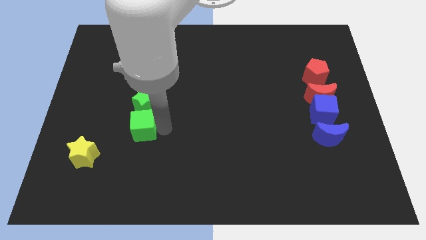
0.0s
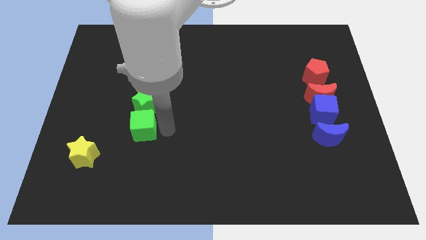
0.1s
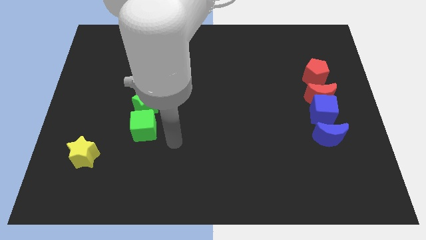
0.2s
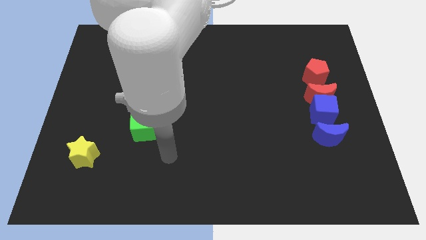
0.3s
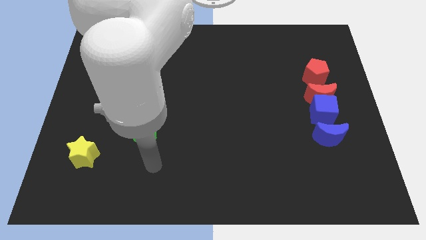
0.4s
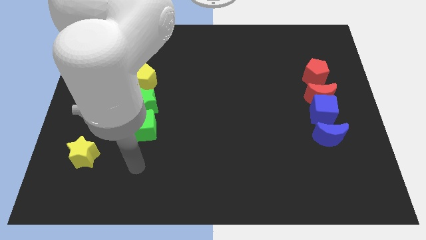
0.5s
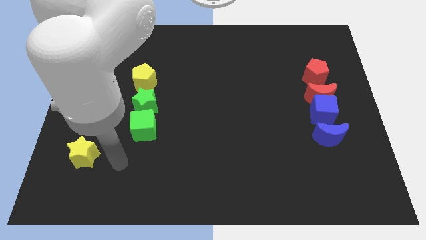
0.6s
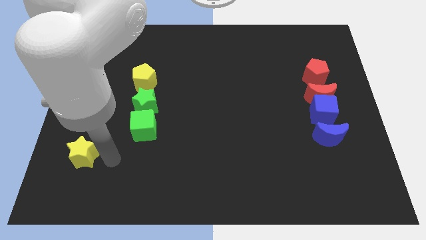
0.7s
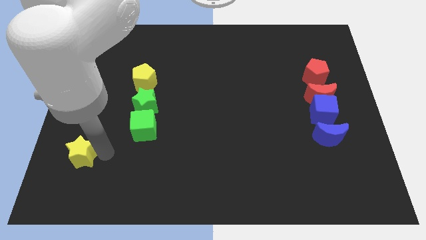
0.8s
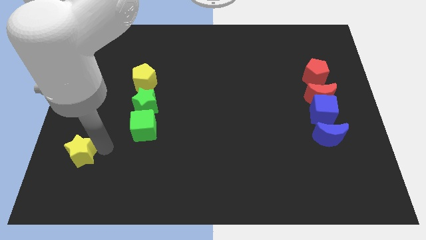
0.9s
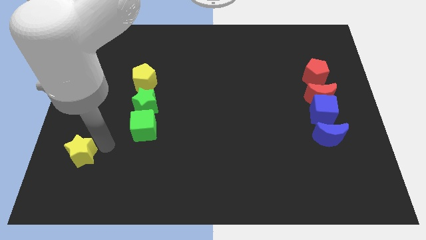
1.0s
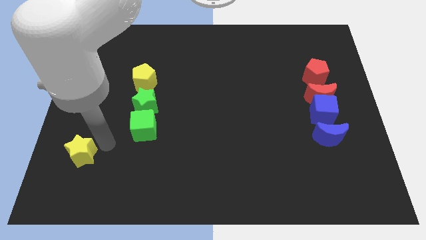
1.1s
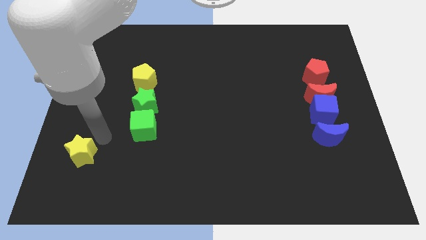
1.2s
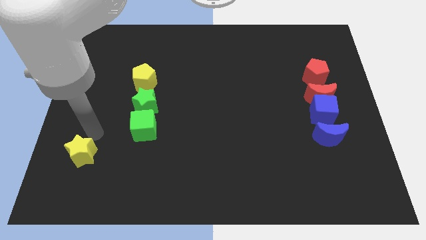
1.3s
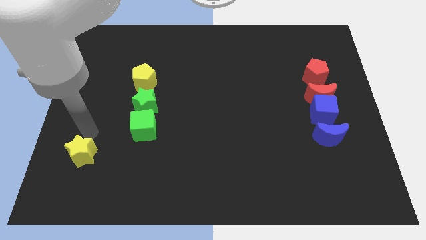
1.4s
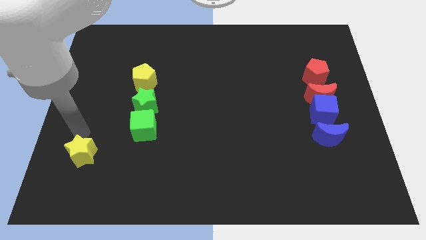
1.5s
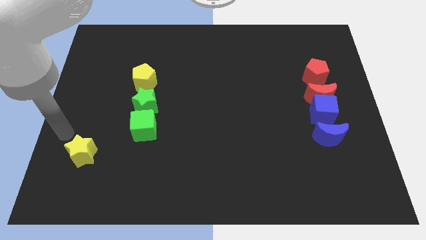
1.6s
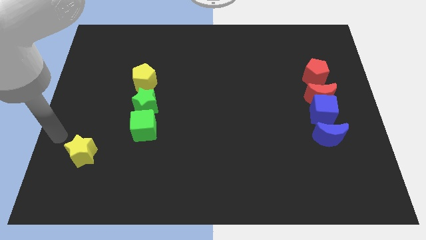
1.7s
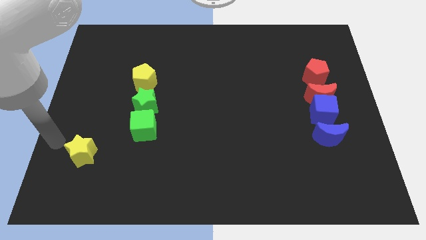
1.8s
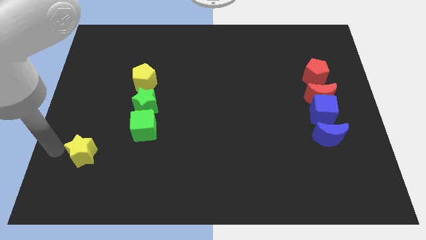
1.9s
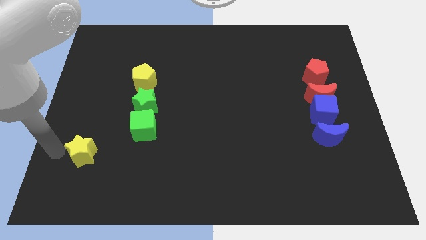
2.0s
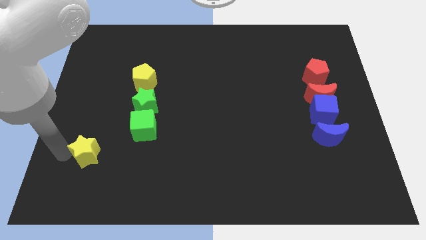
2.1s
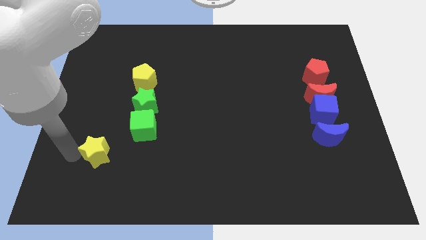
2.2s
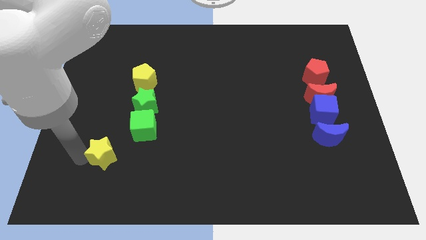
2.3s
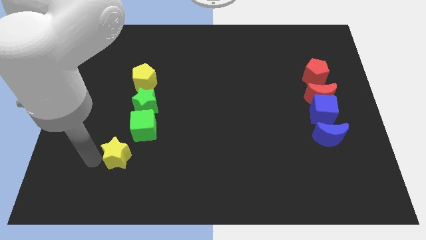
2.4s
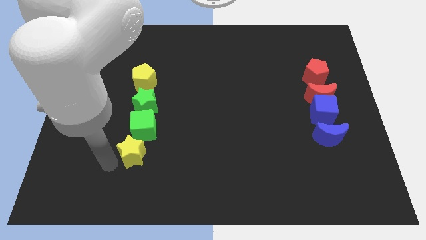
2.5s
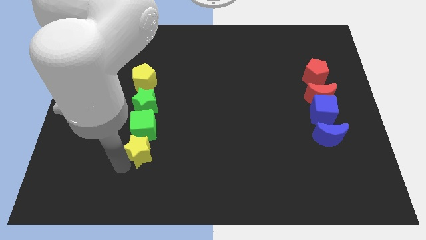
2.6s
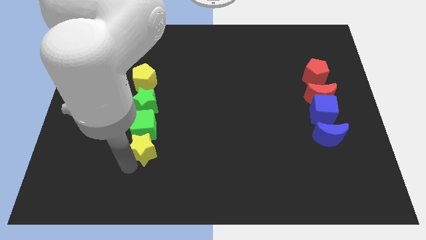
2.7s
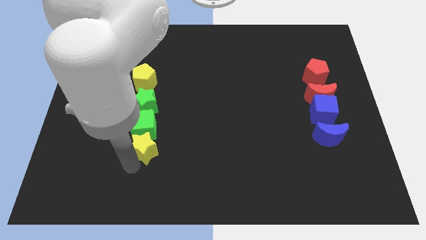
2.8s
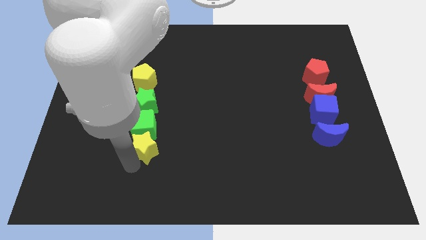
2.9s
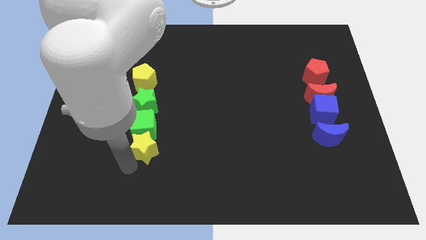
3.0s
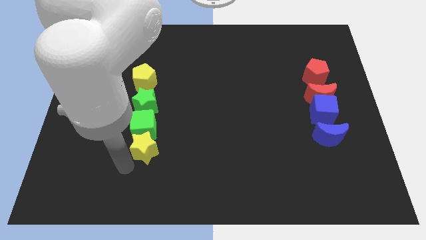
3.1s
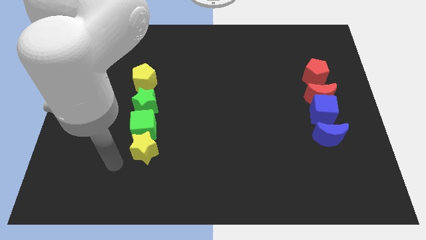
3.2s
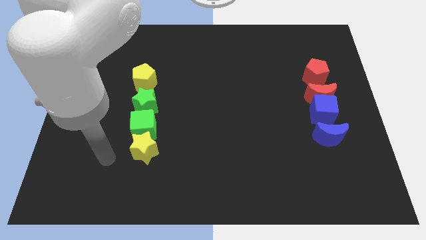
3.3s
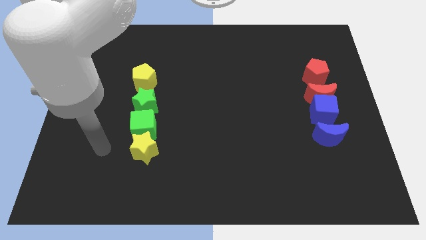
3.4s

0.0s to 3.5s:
place the yellow star below the green cube

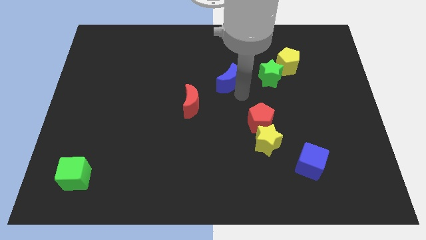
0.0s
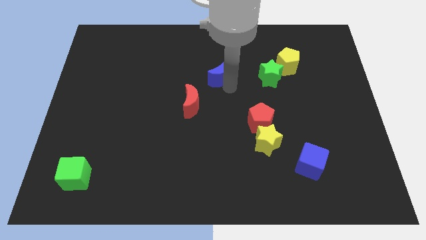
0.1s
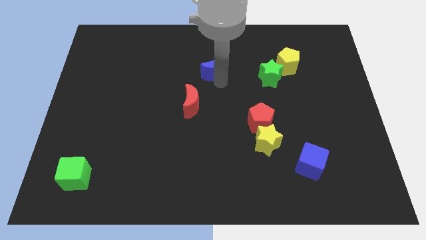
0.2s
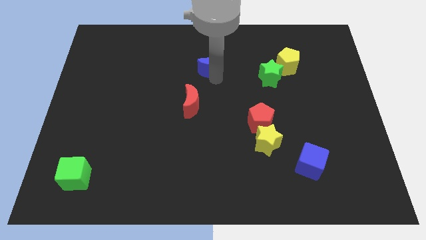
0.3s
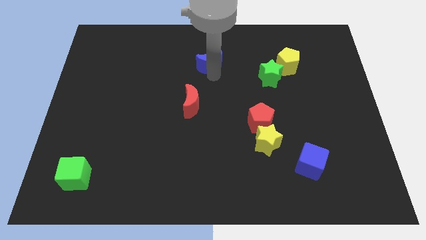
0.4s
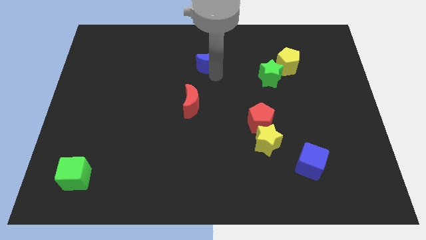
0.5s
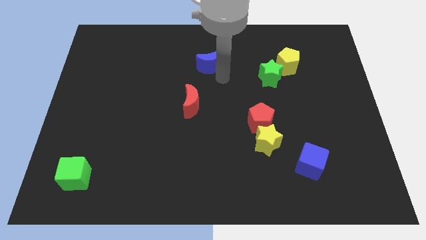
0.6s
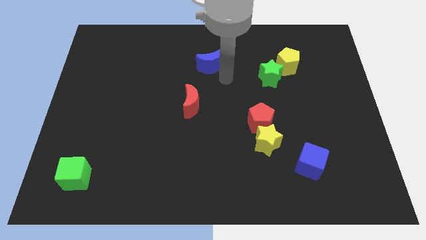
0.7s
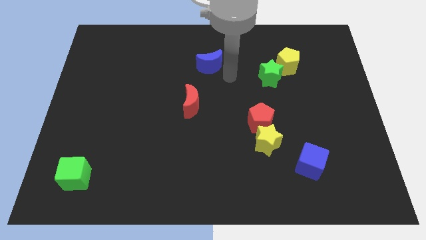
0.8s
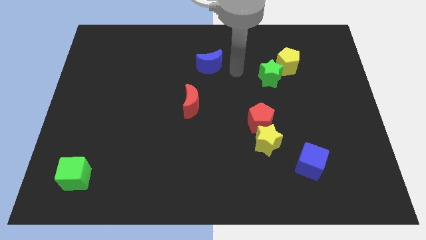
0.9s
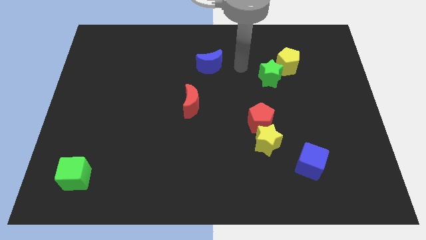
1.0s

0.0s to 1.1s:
move the blue moon toward the top center

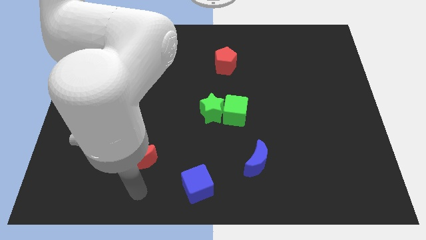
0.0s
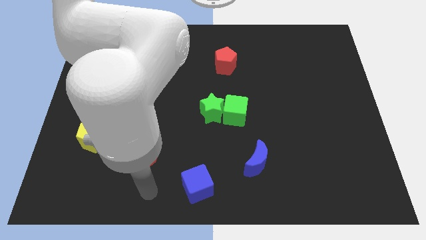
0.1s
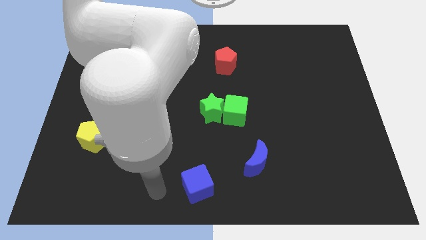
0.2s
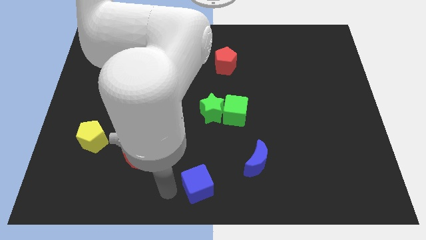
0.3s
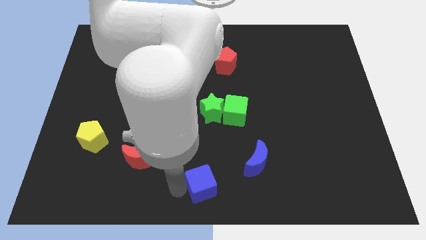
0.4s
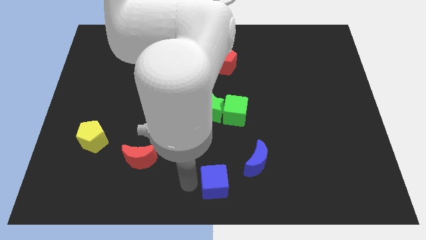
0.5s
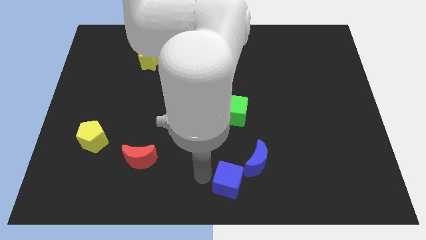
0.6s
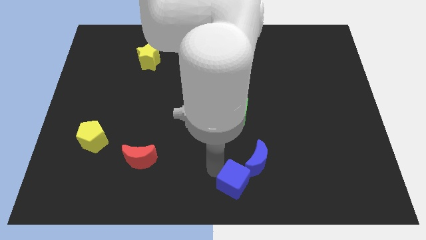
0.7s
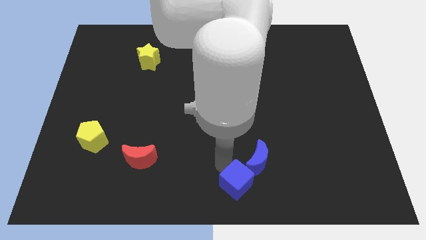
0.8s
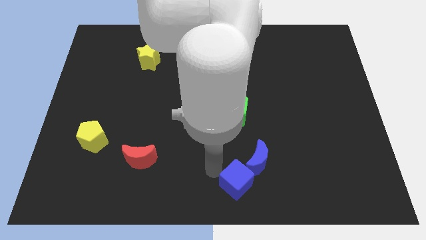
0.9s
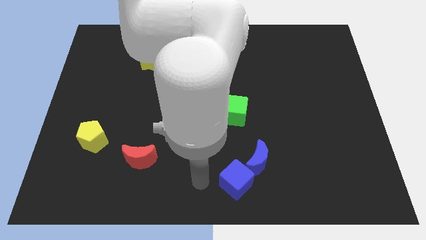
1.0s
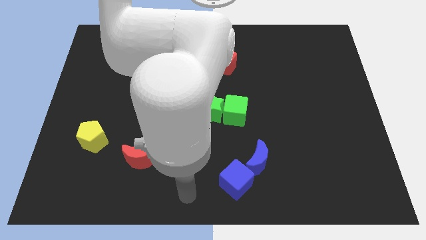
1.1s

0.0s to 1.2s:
move blue cube to the bottom left side of the blue crescent

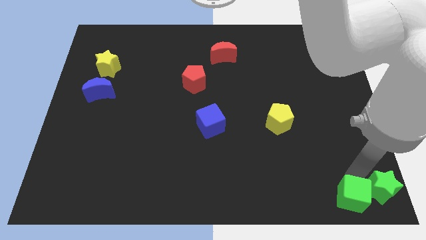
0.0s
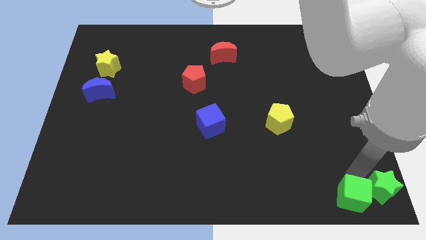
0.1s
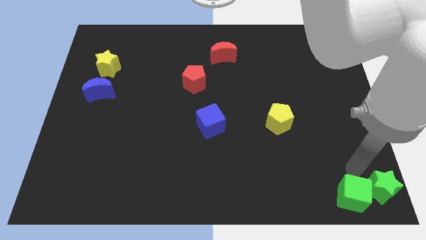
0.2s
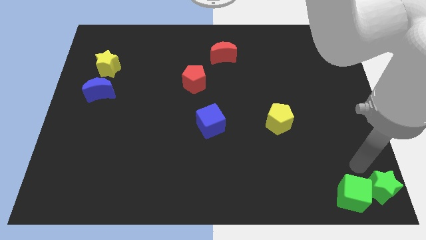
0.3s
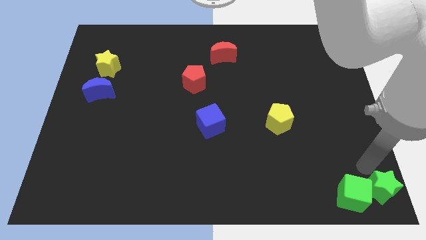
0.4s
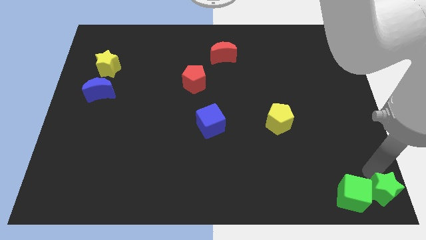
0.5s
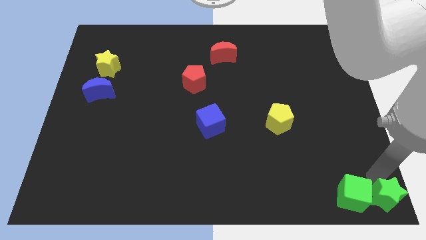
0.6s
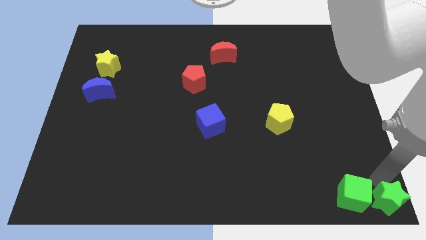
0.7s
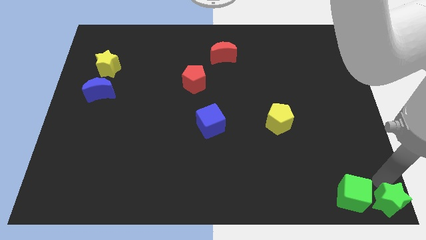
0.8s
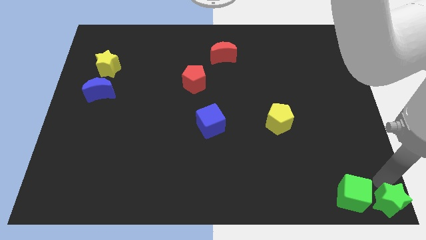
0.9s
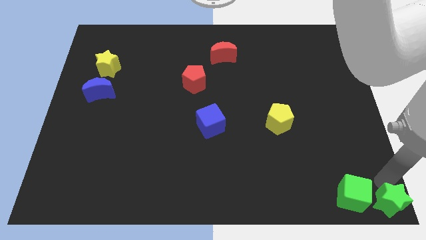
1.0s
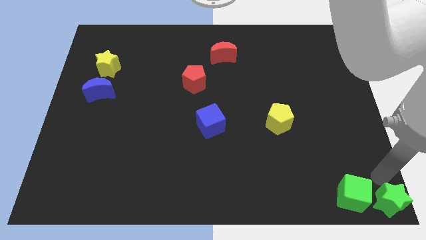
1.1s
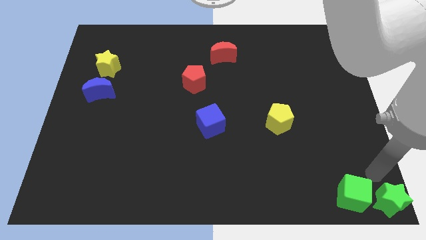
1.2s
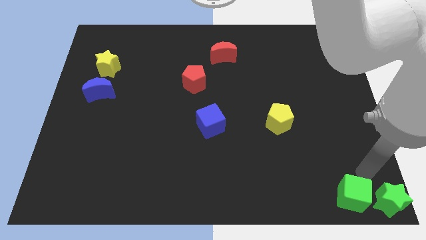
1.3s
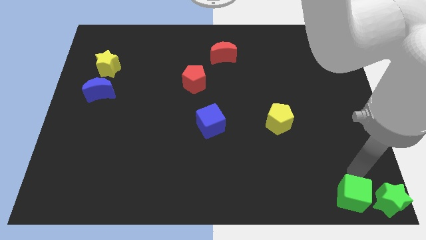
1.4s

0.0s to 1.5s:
push the green star downwards slightly

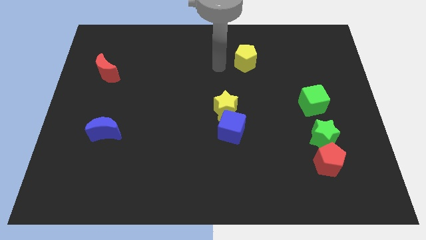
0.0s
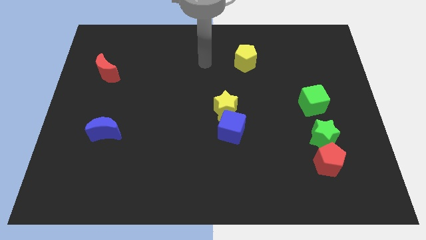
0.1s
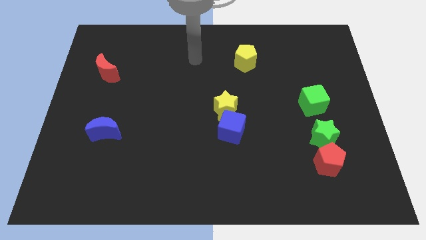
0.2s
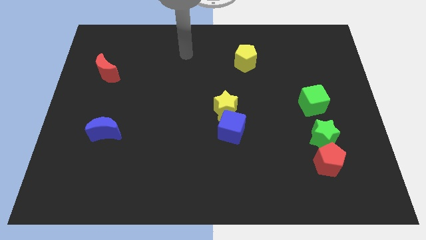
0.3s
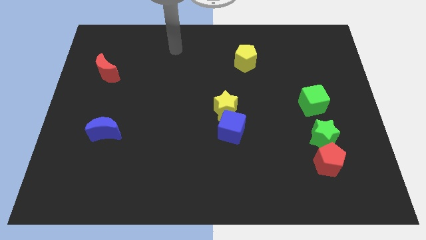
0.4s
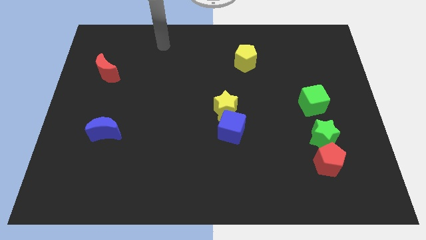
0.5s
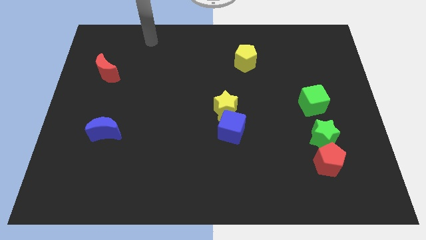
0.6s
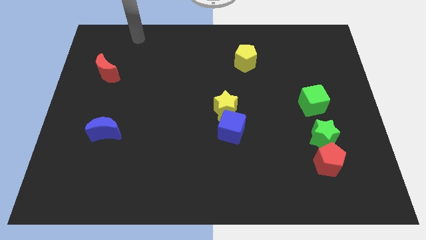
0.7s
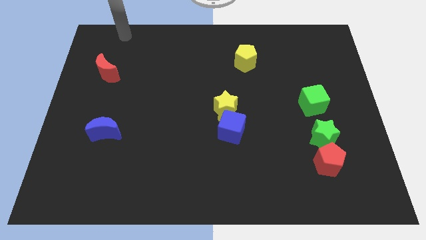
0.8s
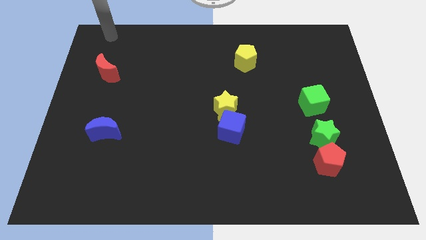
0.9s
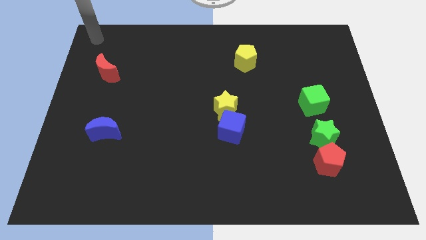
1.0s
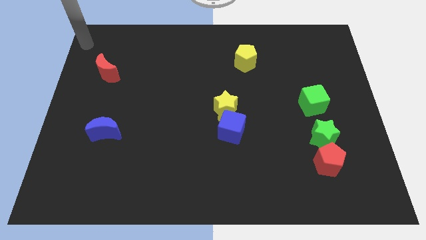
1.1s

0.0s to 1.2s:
place your hand at top left side of the board

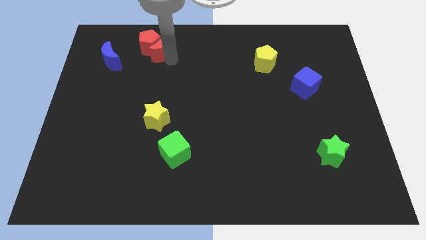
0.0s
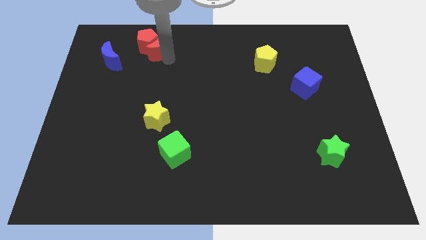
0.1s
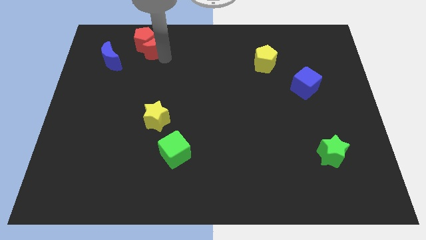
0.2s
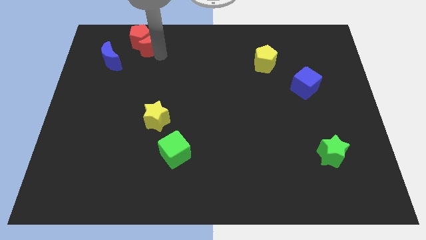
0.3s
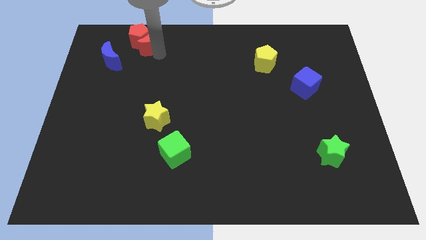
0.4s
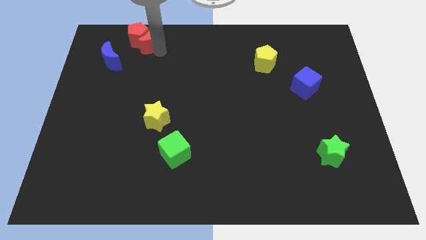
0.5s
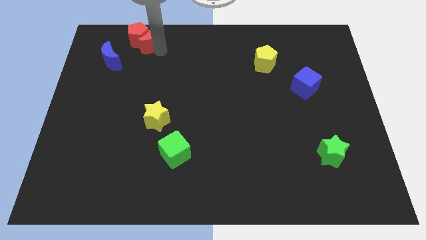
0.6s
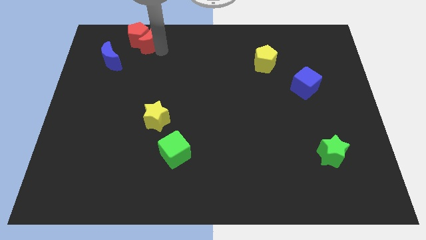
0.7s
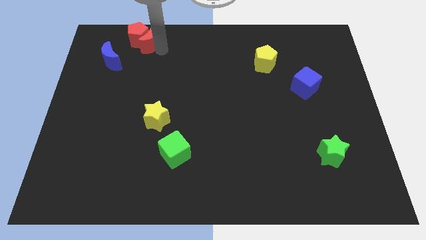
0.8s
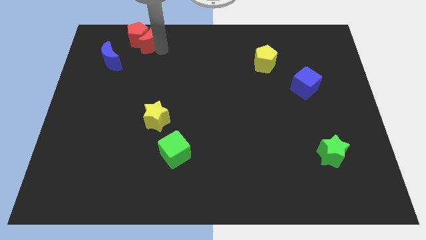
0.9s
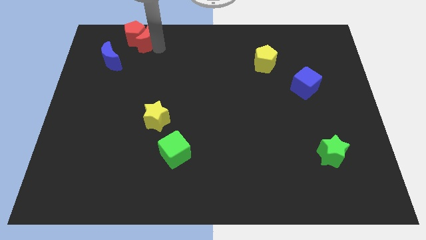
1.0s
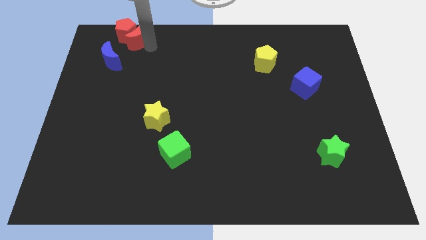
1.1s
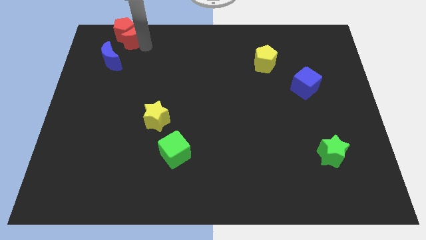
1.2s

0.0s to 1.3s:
drag the red blocks to top left
